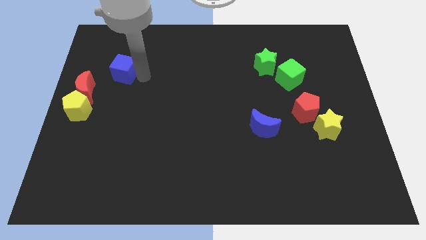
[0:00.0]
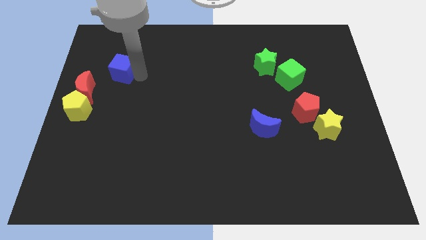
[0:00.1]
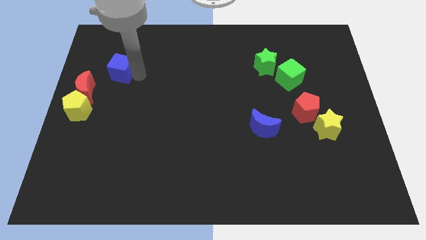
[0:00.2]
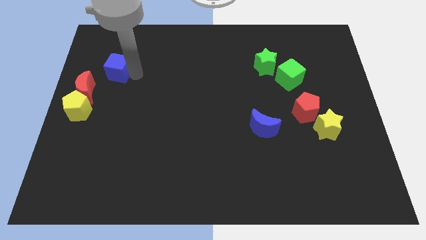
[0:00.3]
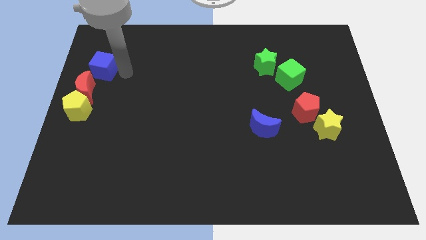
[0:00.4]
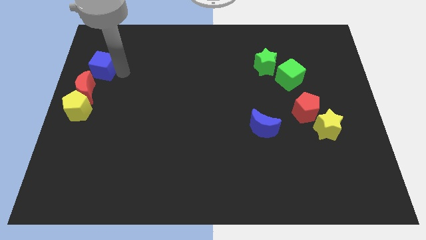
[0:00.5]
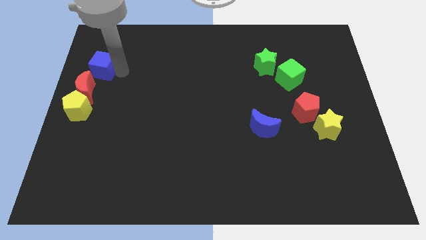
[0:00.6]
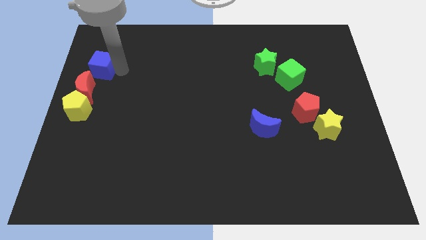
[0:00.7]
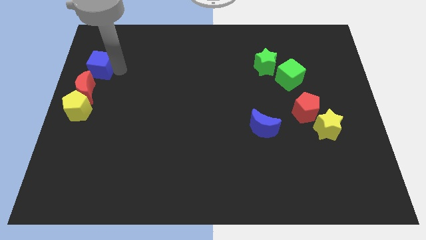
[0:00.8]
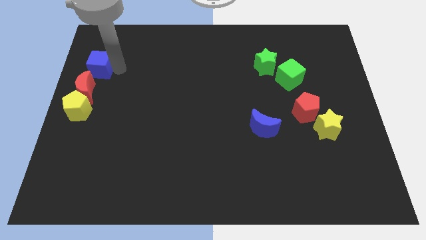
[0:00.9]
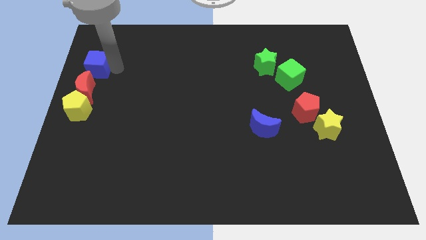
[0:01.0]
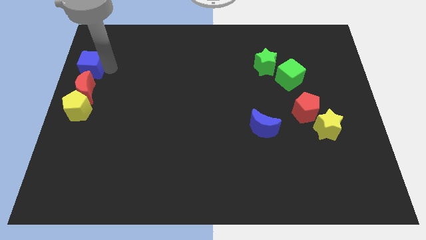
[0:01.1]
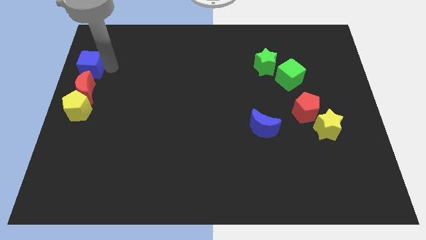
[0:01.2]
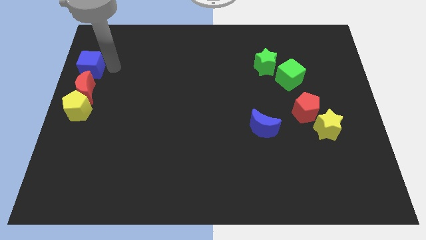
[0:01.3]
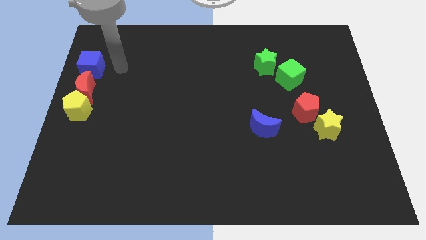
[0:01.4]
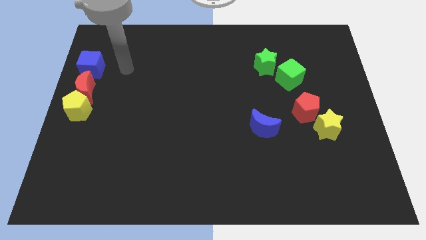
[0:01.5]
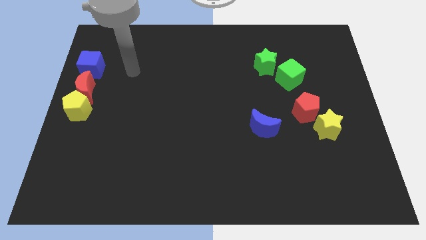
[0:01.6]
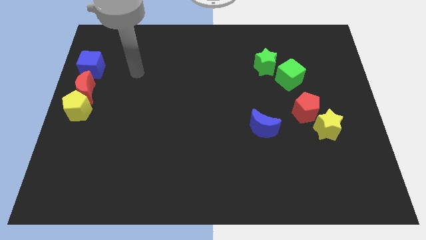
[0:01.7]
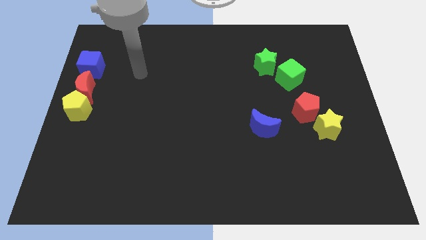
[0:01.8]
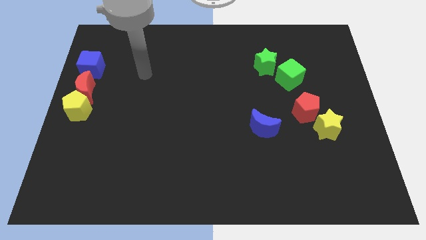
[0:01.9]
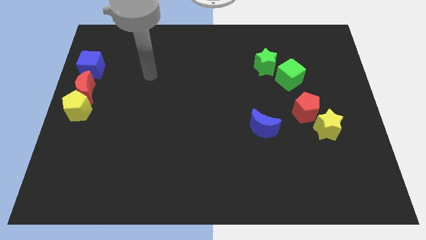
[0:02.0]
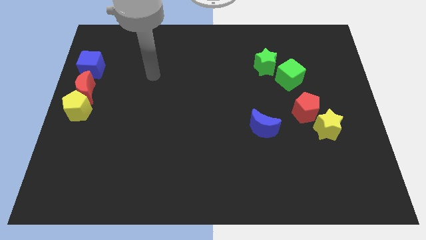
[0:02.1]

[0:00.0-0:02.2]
move the blue cube to the top of the red crescent

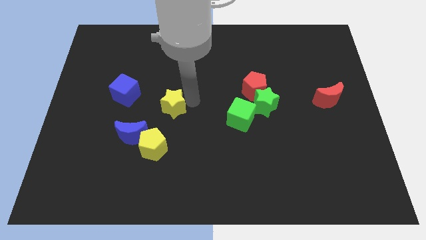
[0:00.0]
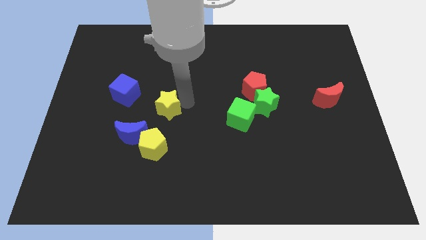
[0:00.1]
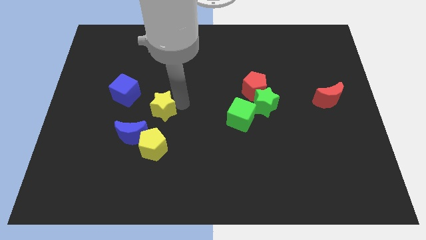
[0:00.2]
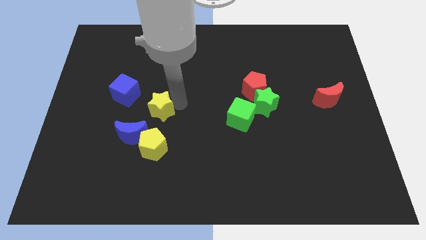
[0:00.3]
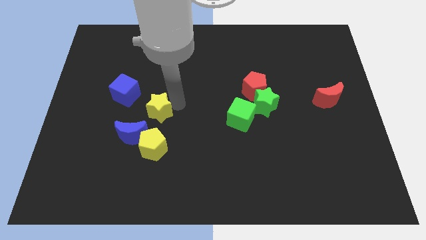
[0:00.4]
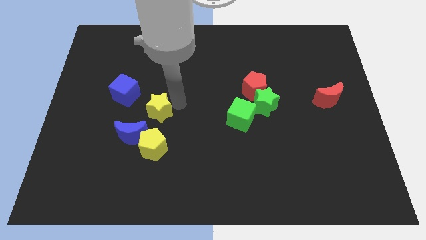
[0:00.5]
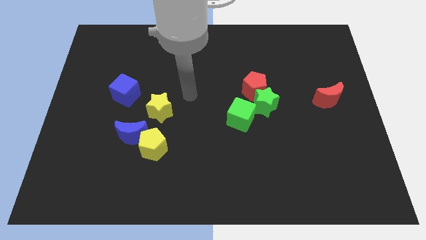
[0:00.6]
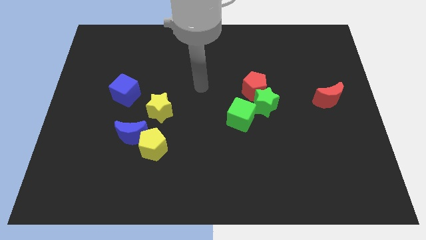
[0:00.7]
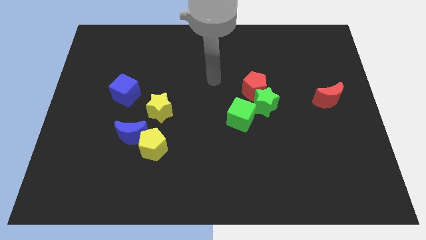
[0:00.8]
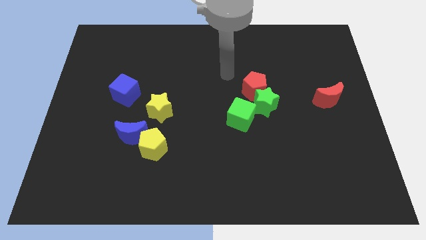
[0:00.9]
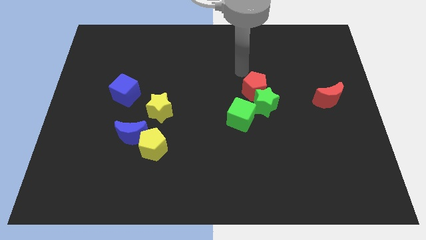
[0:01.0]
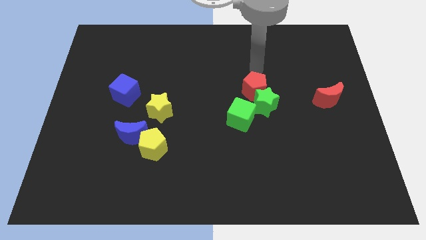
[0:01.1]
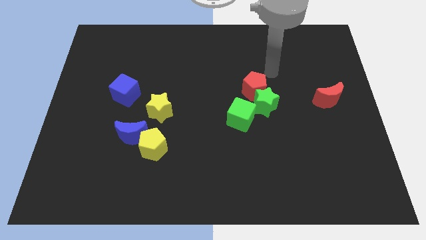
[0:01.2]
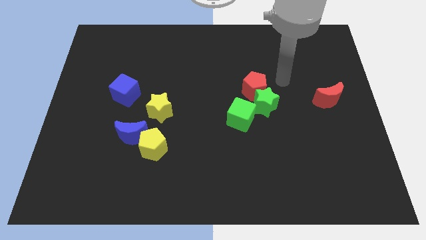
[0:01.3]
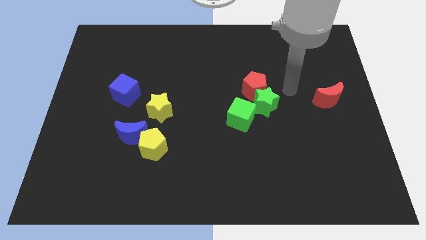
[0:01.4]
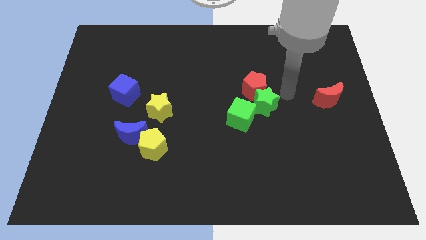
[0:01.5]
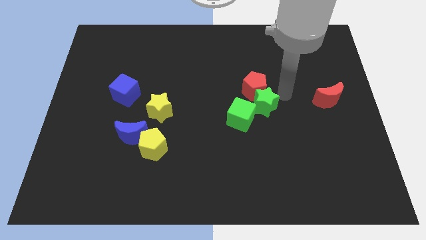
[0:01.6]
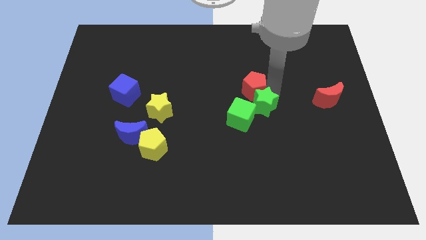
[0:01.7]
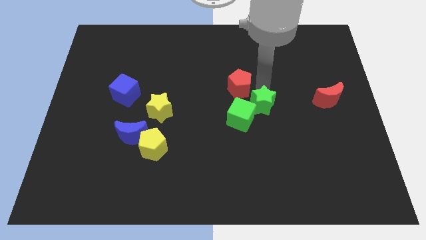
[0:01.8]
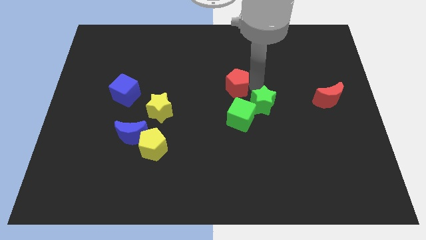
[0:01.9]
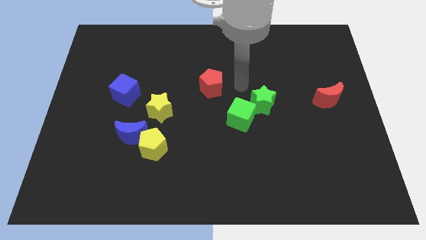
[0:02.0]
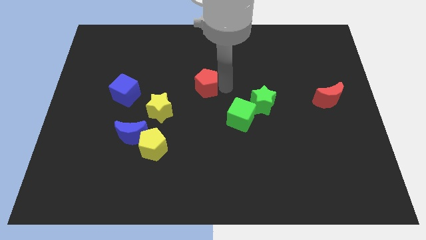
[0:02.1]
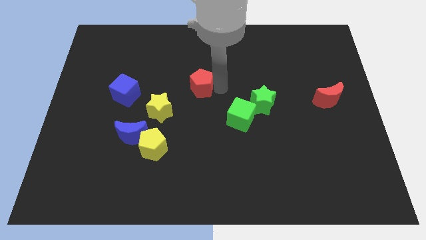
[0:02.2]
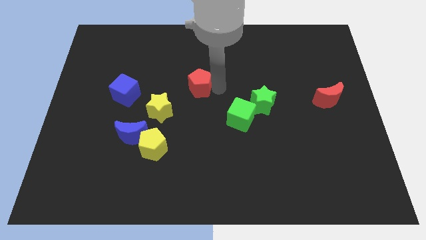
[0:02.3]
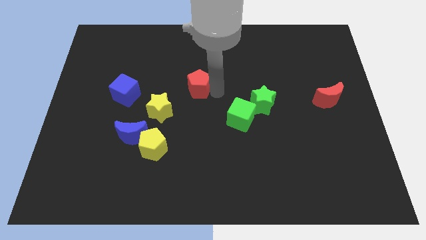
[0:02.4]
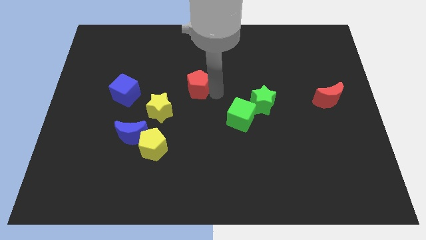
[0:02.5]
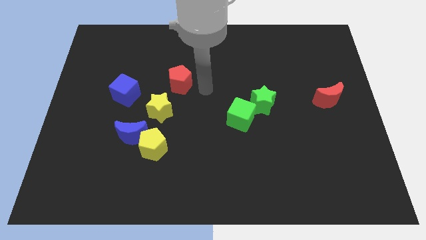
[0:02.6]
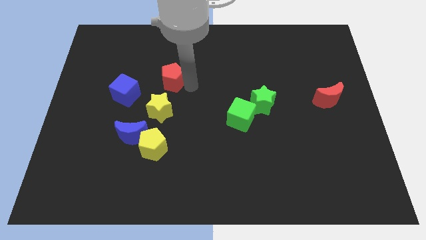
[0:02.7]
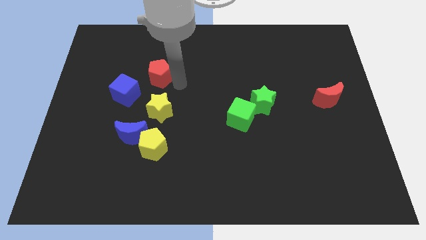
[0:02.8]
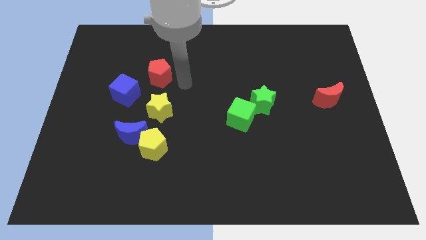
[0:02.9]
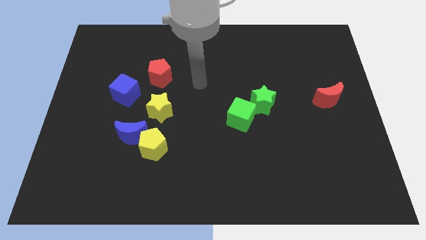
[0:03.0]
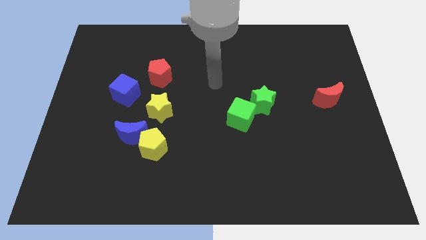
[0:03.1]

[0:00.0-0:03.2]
place red pentagon above yellow star

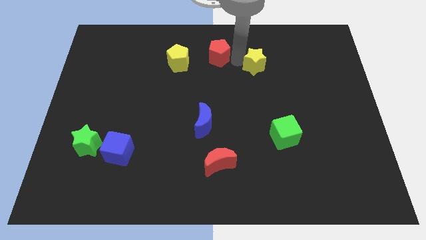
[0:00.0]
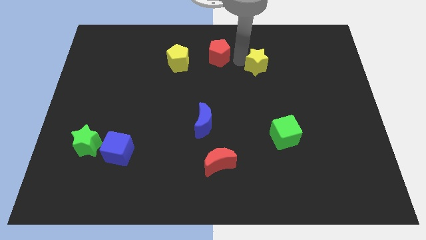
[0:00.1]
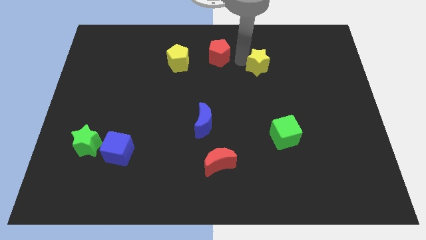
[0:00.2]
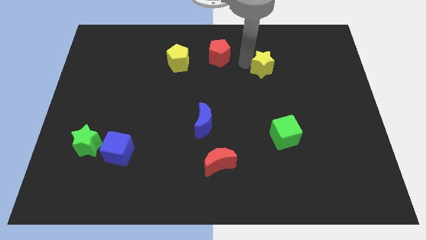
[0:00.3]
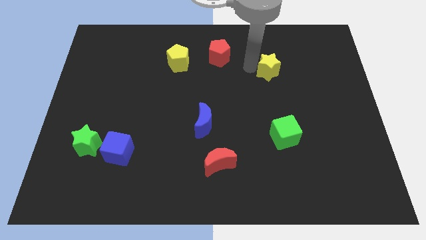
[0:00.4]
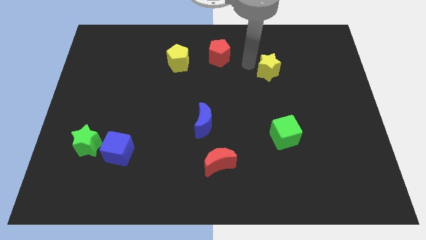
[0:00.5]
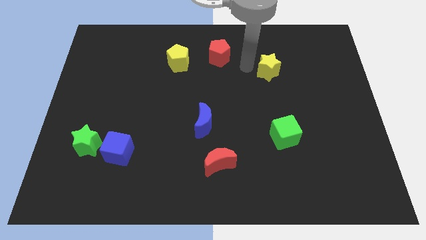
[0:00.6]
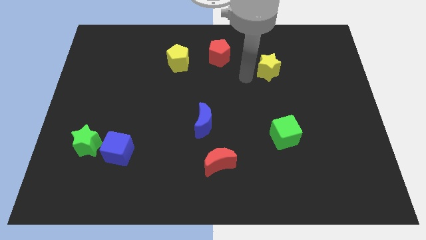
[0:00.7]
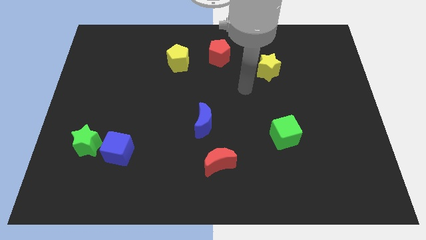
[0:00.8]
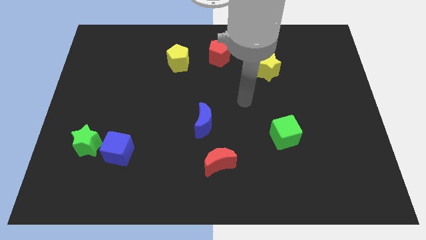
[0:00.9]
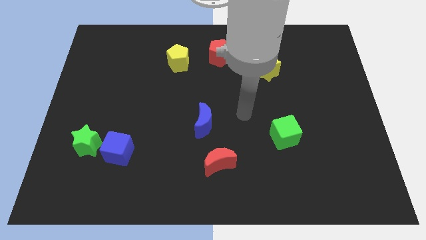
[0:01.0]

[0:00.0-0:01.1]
slide the yellow star slightly to the right

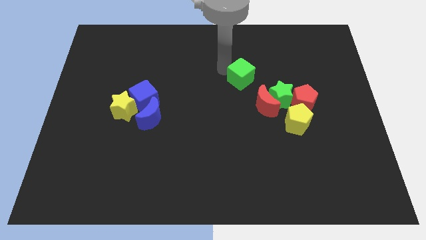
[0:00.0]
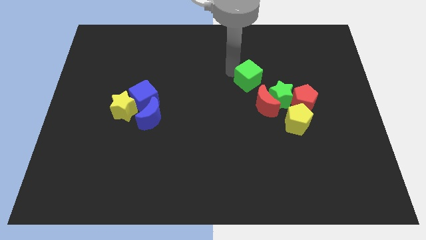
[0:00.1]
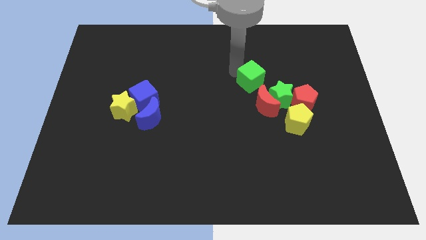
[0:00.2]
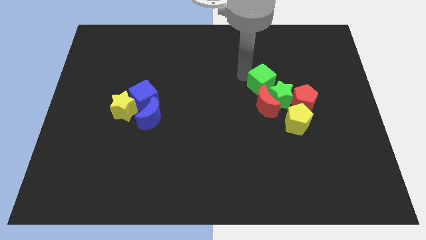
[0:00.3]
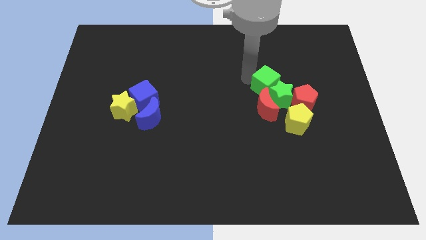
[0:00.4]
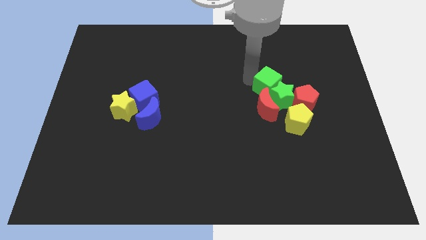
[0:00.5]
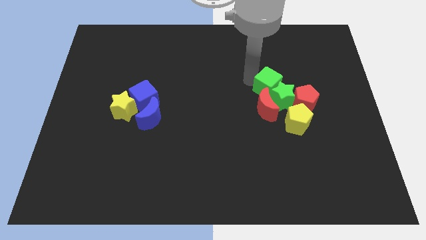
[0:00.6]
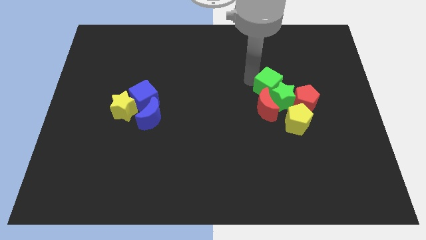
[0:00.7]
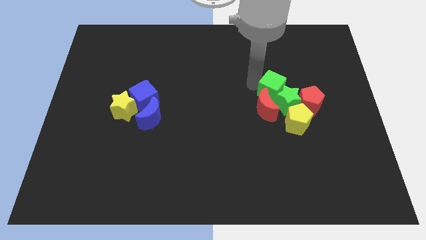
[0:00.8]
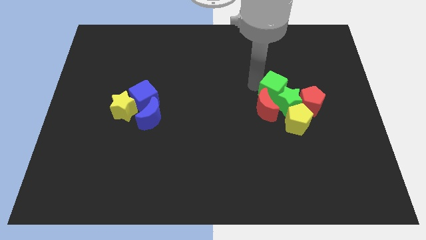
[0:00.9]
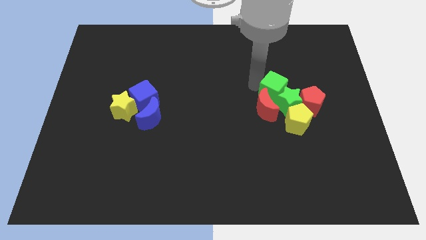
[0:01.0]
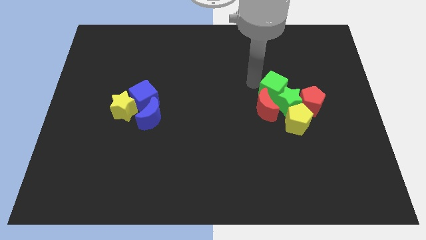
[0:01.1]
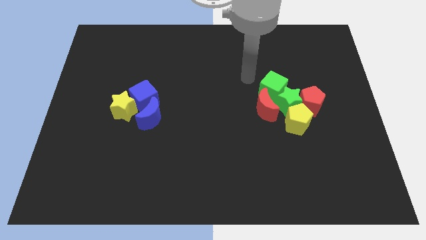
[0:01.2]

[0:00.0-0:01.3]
slightly push the green star with the green cube

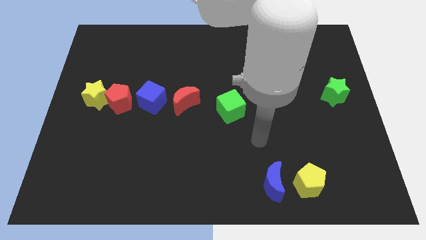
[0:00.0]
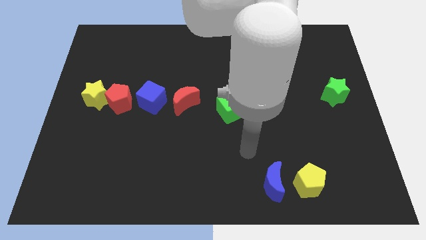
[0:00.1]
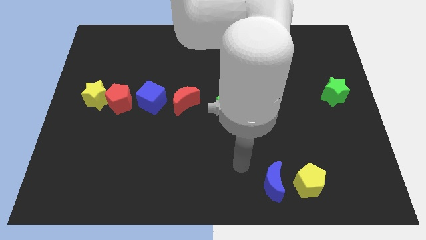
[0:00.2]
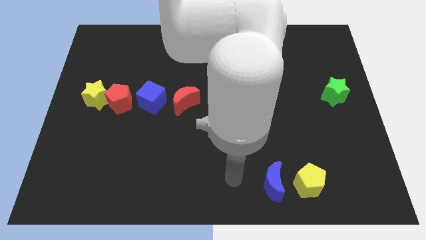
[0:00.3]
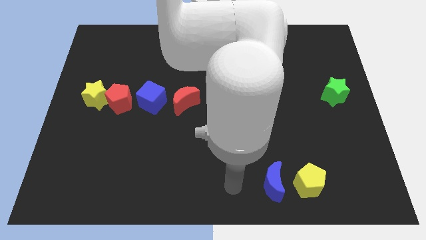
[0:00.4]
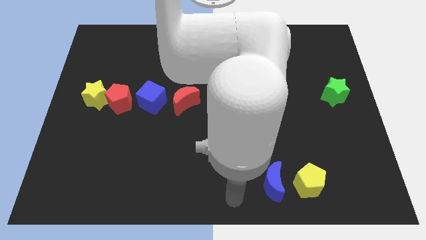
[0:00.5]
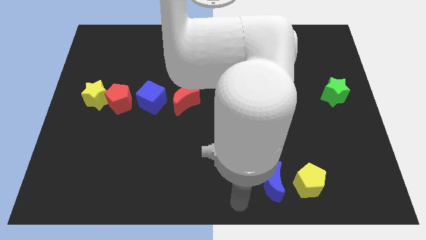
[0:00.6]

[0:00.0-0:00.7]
move the arm right to the blue moon

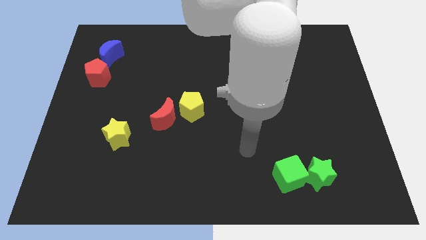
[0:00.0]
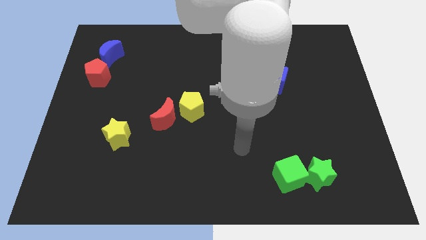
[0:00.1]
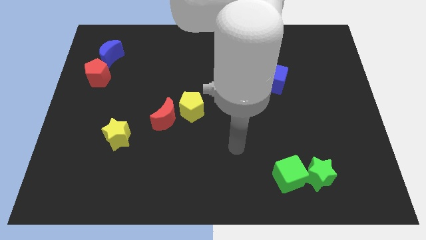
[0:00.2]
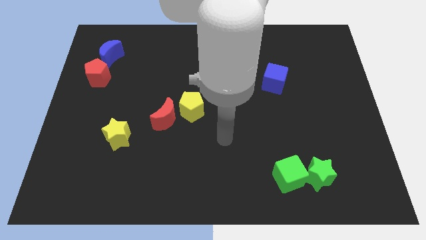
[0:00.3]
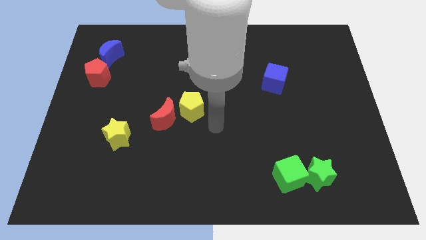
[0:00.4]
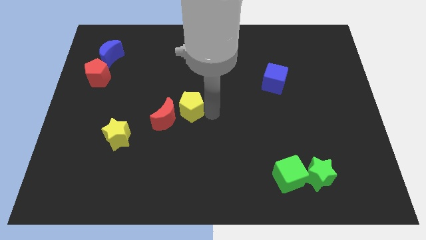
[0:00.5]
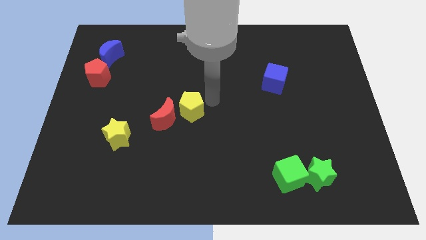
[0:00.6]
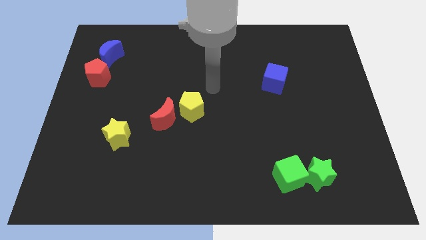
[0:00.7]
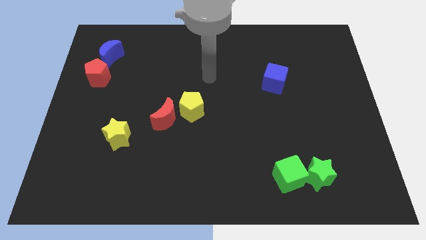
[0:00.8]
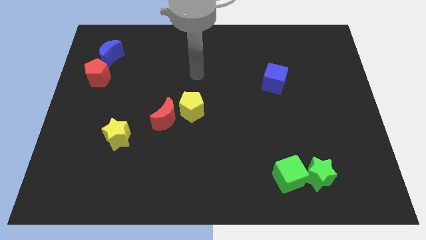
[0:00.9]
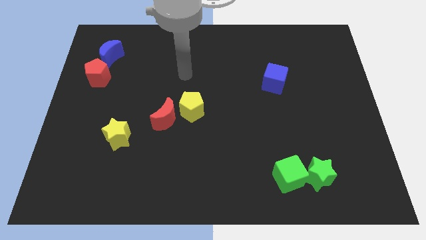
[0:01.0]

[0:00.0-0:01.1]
slide your hand above yellow pentagon
